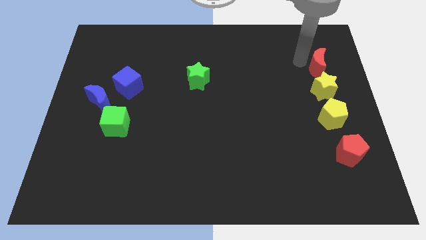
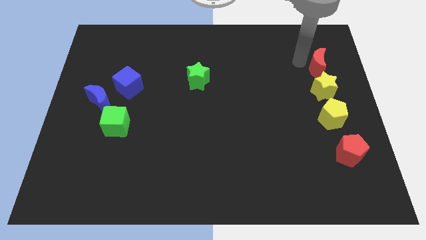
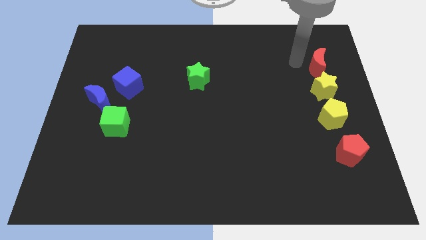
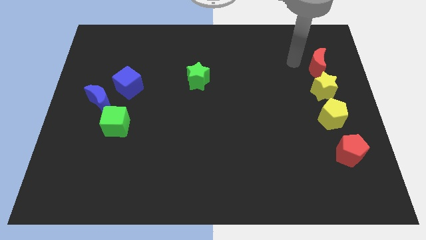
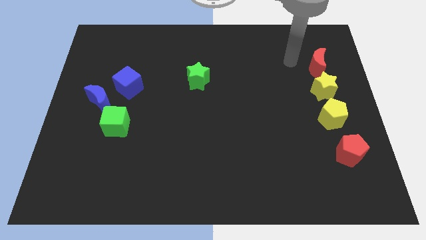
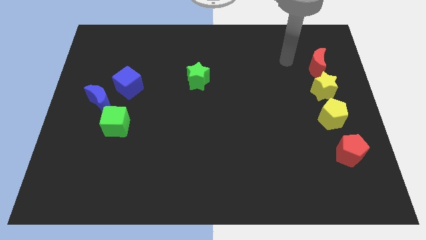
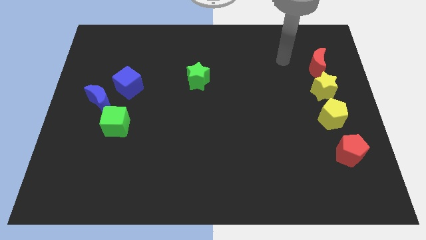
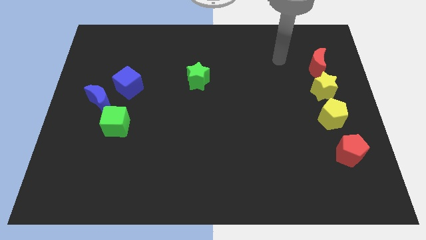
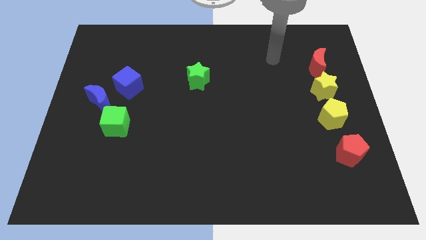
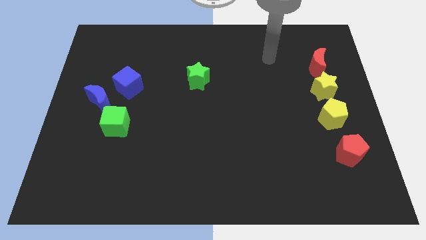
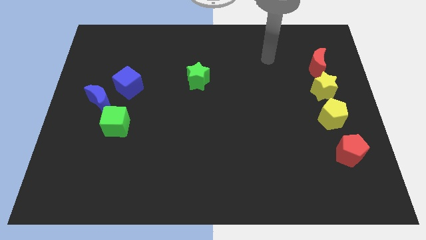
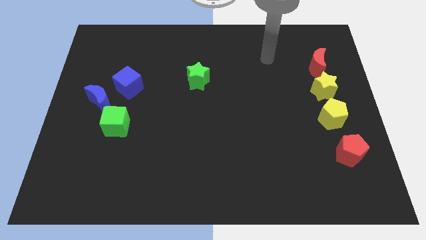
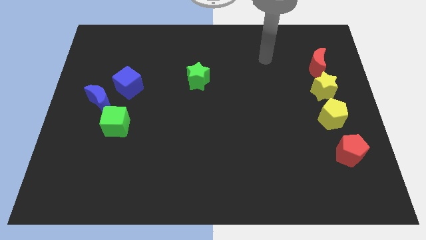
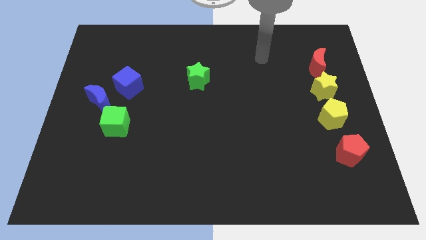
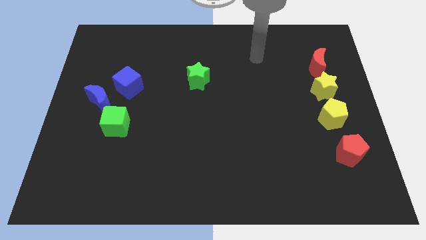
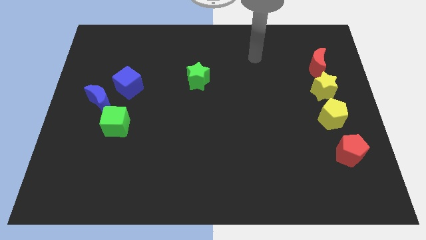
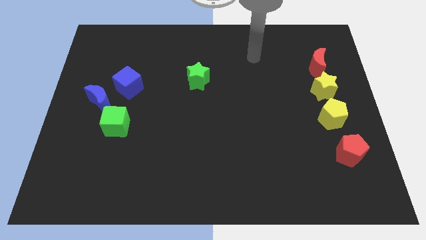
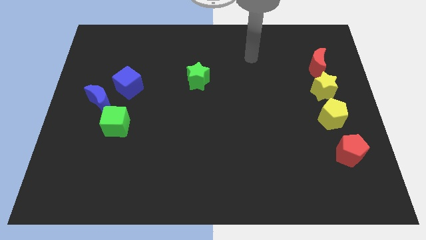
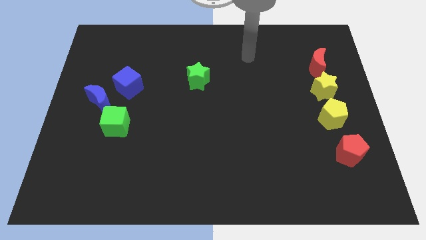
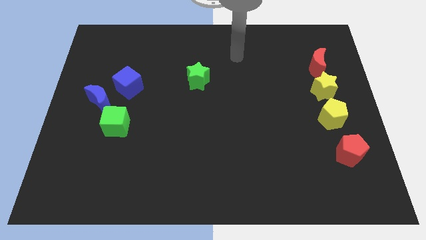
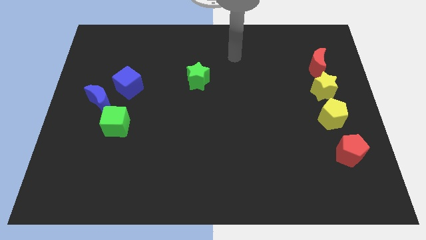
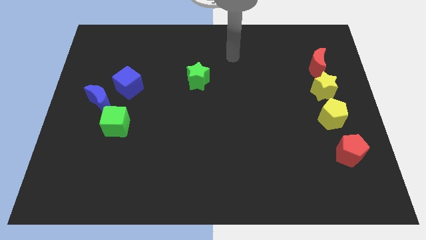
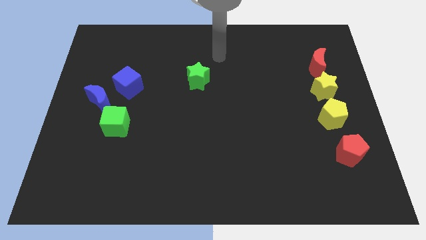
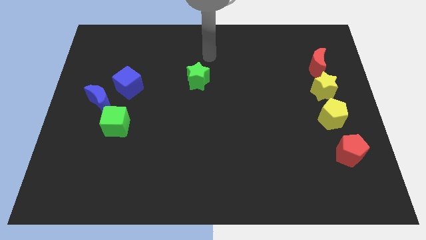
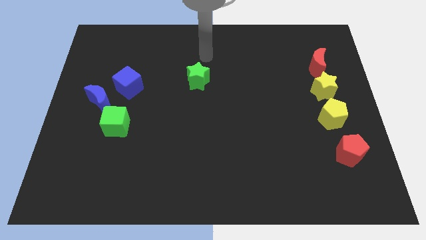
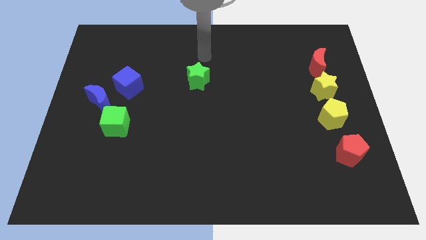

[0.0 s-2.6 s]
move your arm away from the red crescent

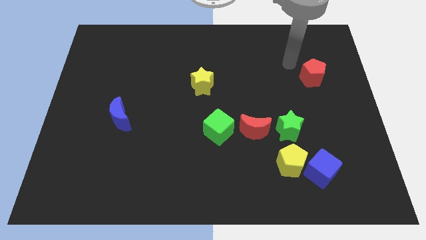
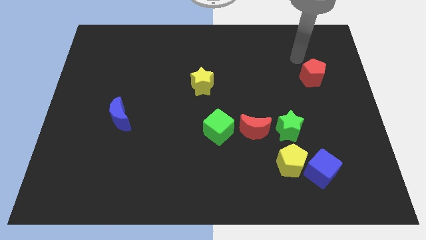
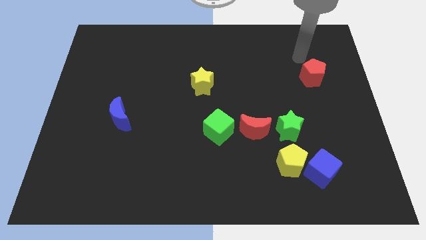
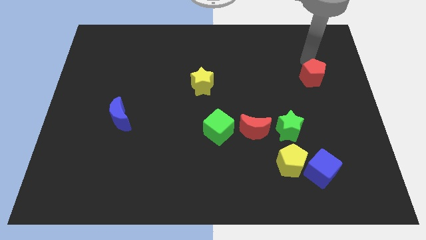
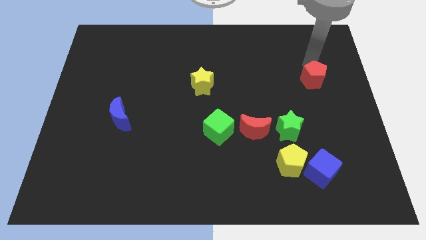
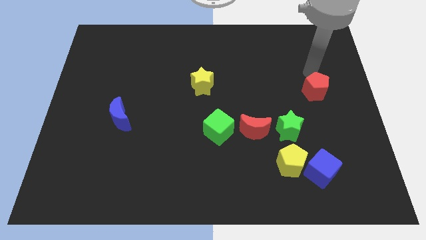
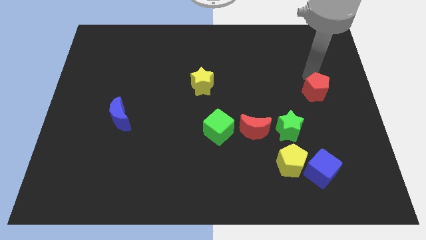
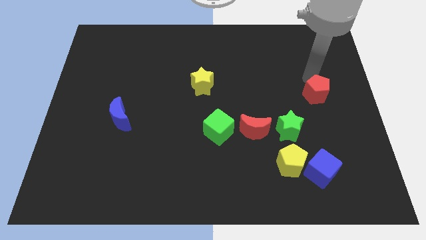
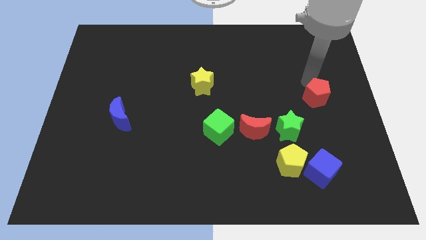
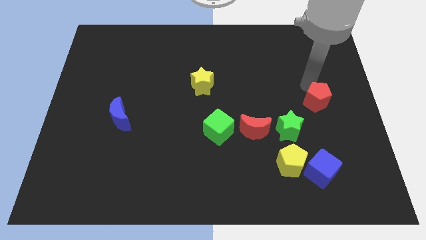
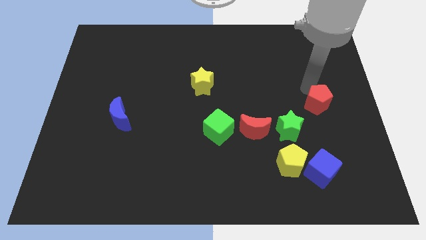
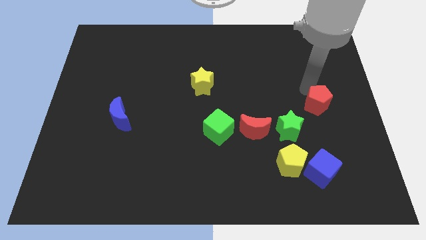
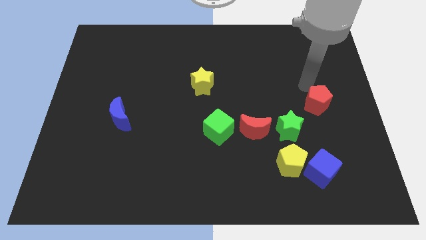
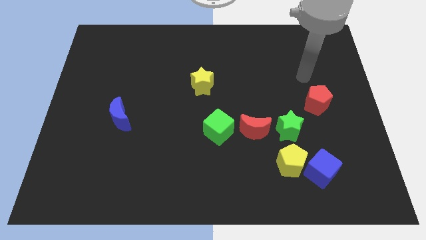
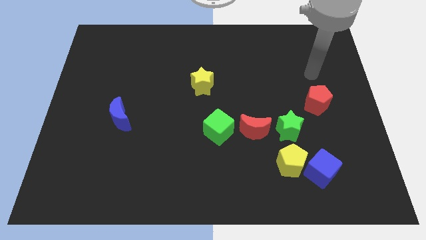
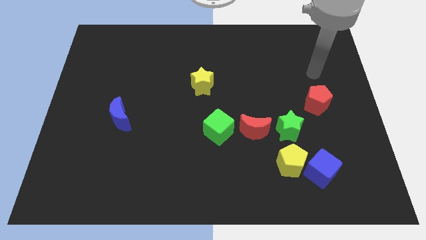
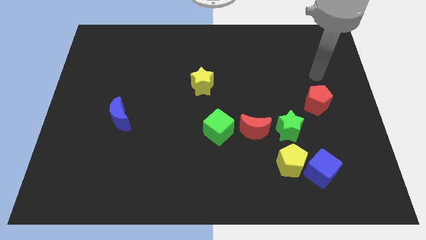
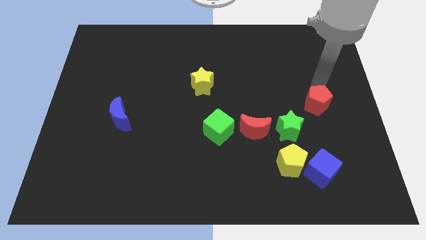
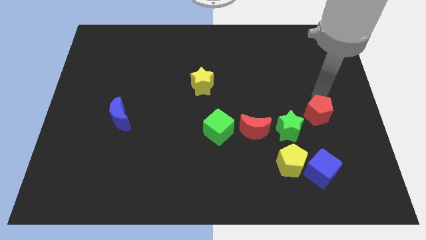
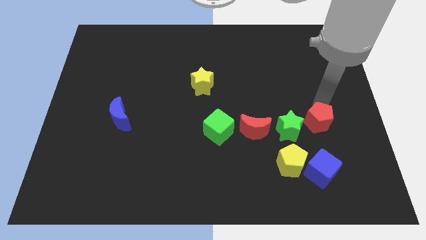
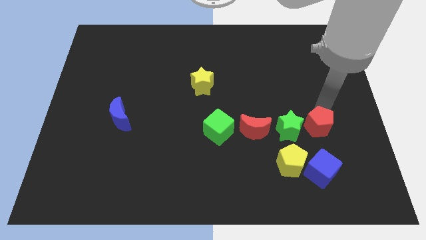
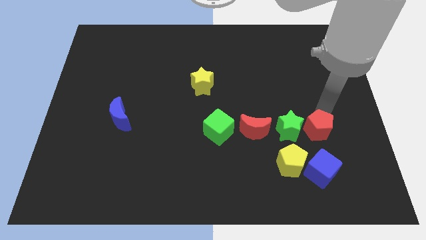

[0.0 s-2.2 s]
drag the red pentagon to the right side of the green star

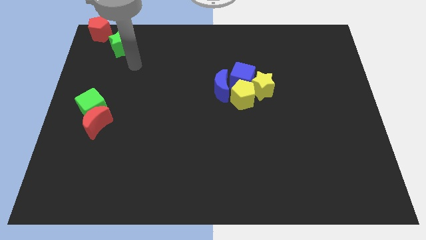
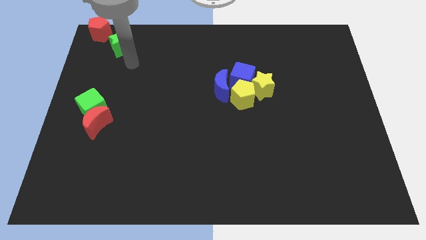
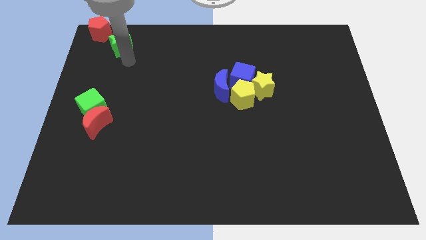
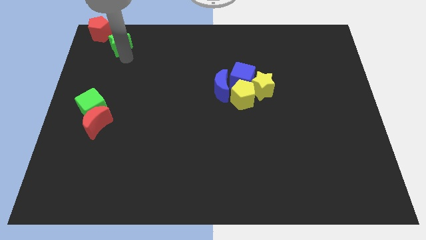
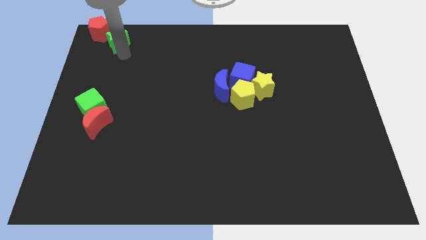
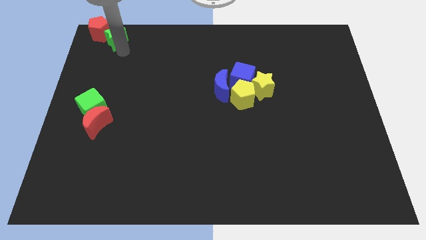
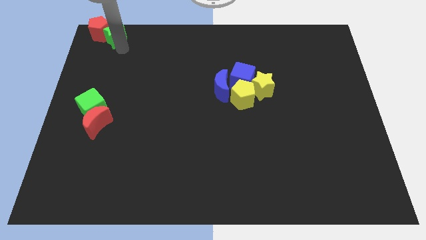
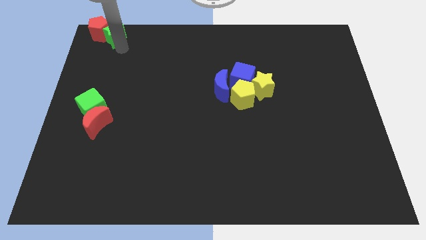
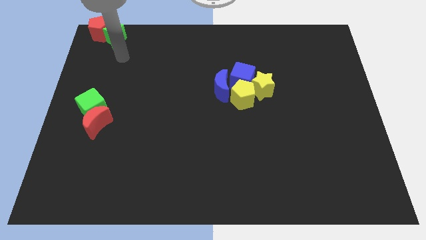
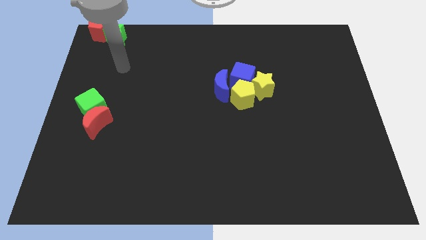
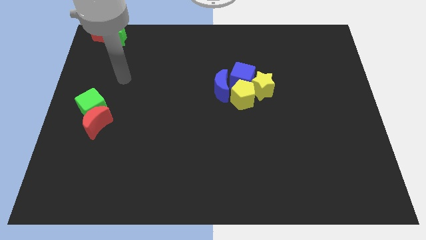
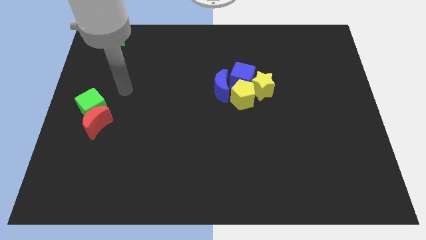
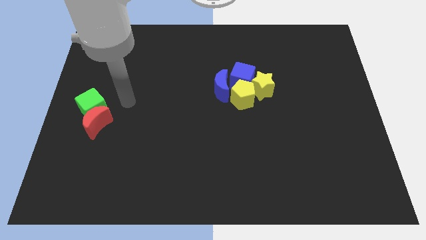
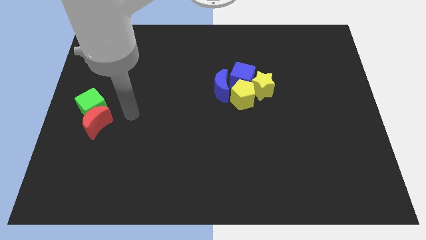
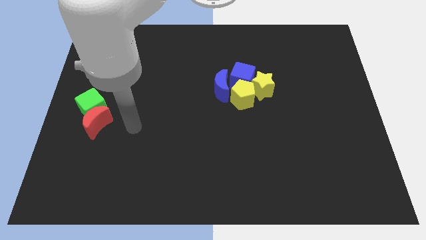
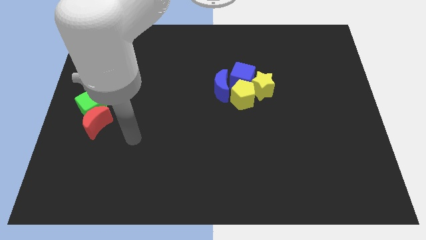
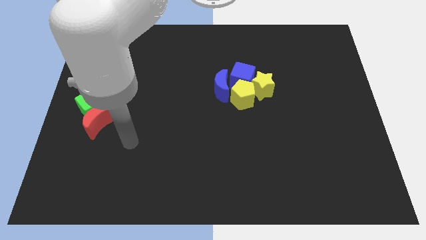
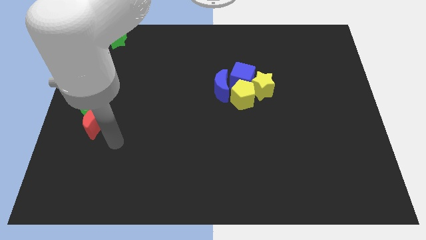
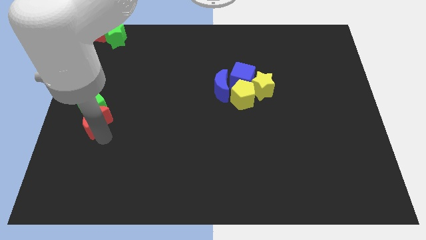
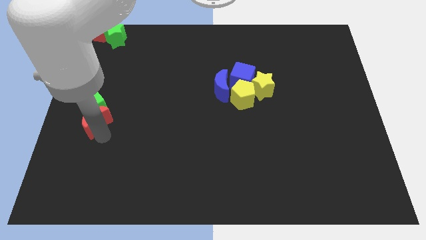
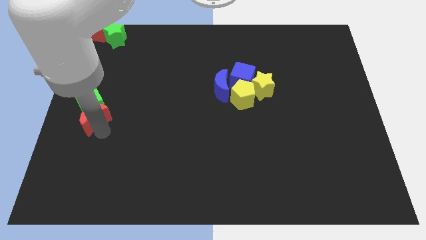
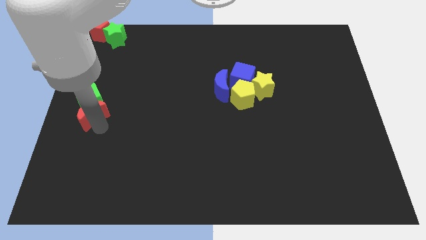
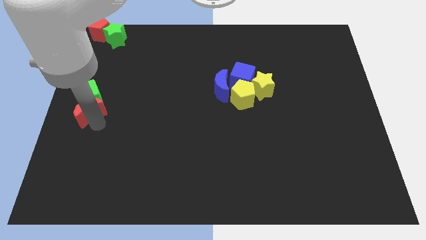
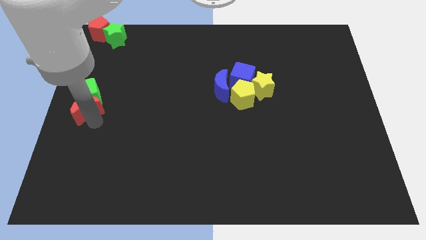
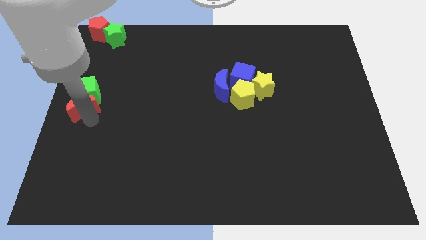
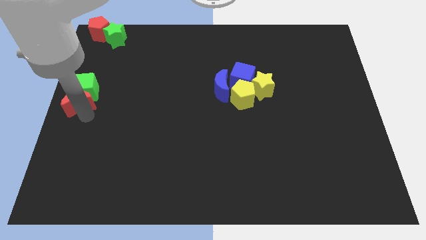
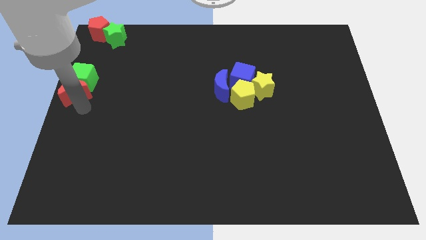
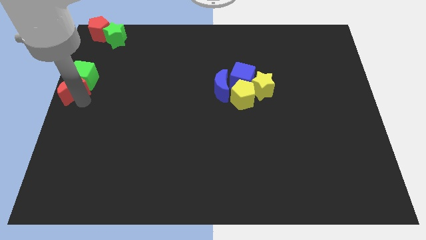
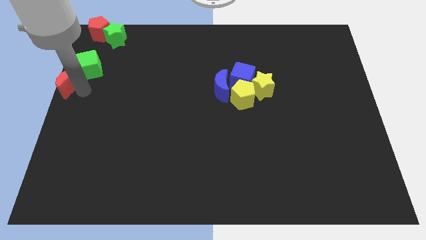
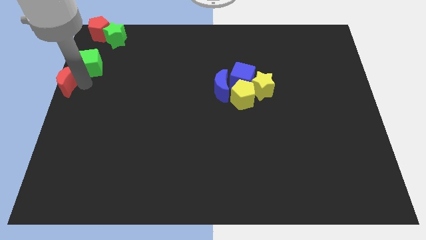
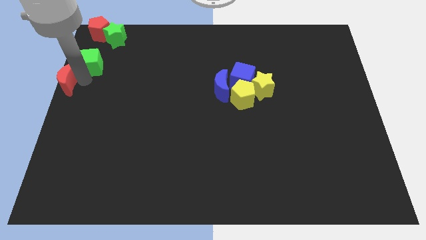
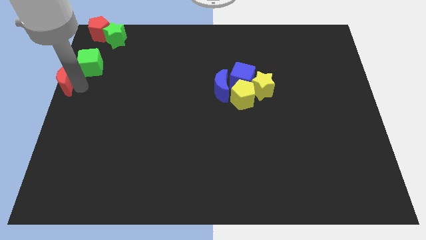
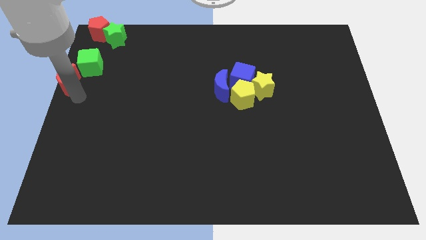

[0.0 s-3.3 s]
move the green cube and red crescent towards top left

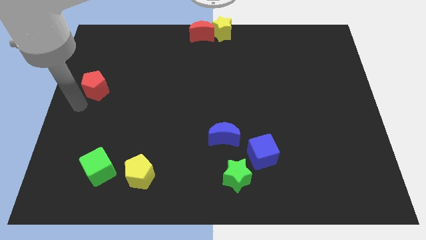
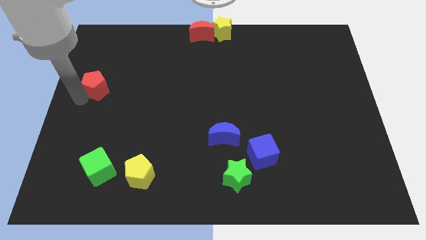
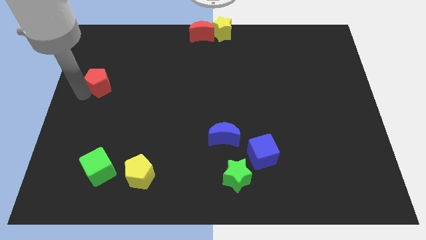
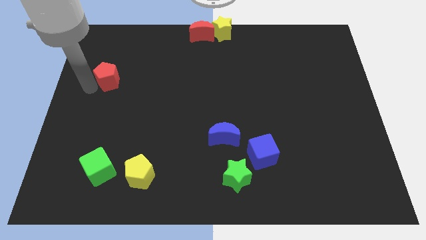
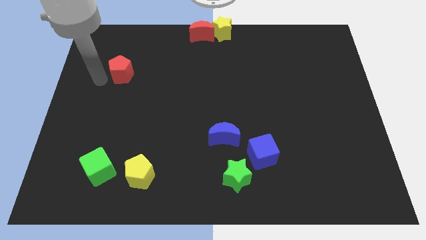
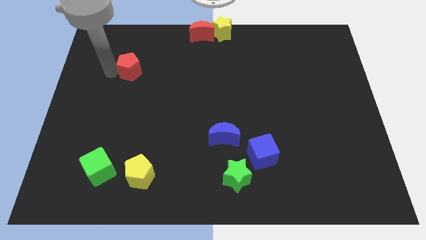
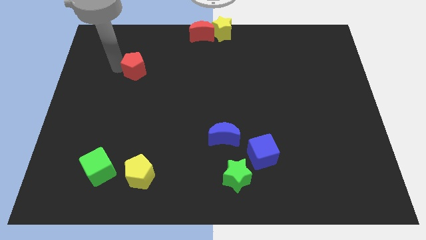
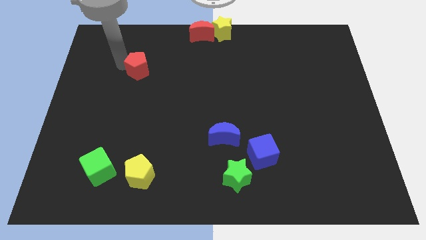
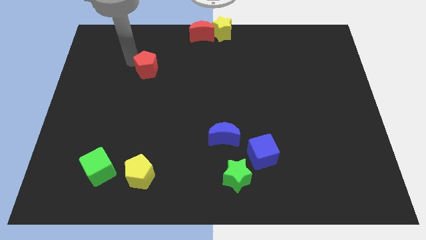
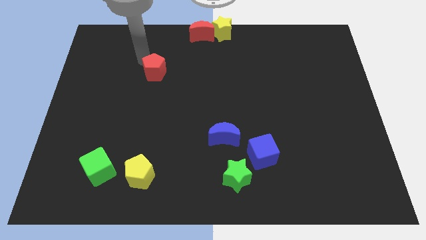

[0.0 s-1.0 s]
place the red pentagon above the yellow pentagon

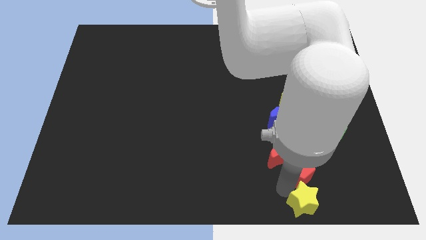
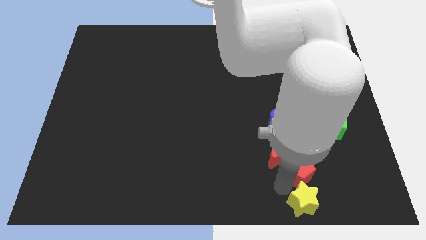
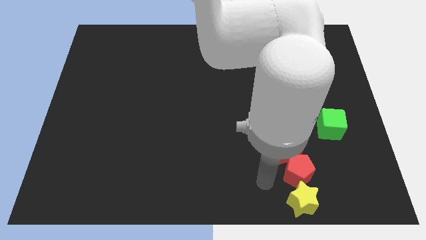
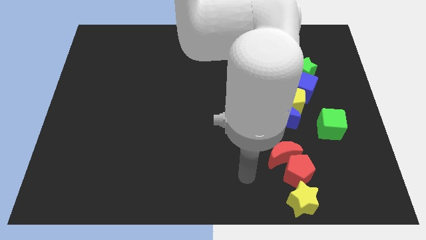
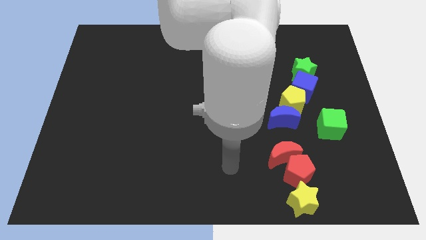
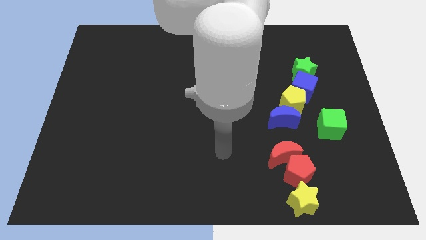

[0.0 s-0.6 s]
move the arm away from the yellow star
